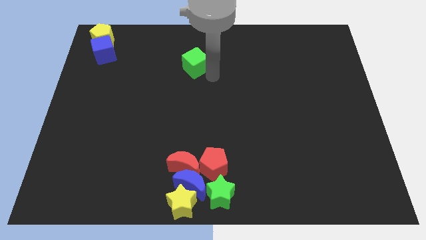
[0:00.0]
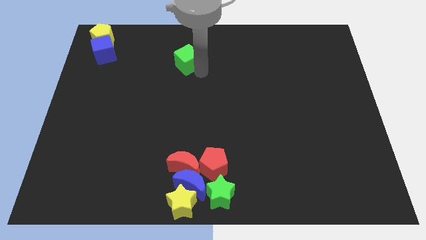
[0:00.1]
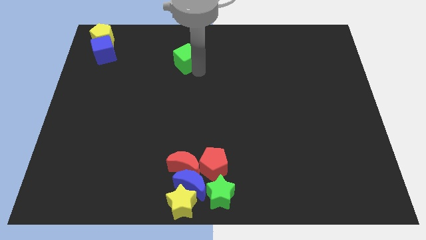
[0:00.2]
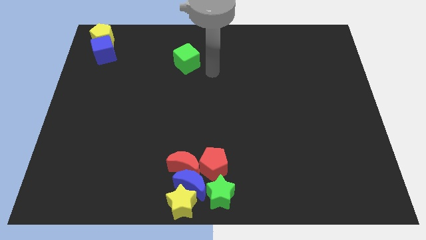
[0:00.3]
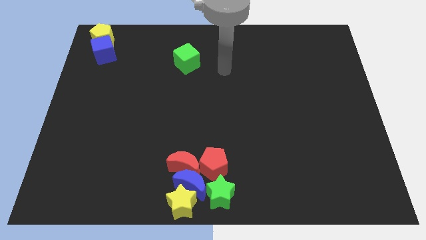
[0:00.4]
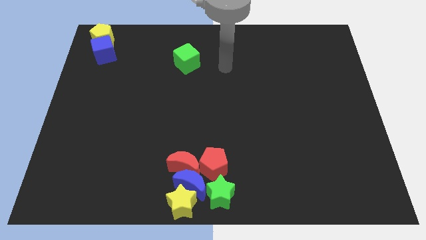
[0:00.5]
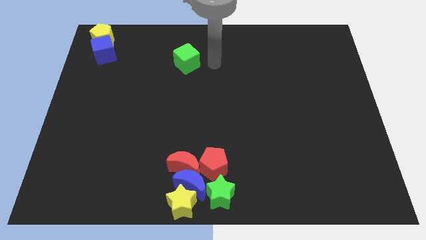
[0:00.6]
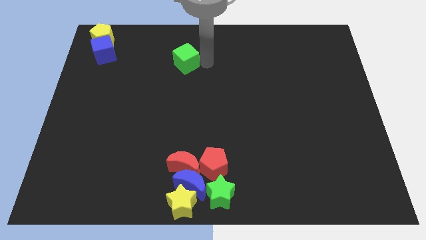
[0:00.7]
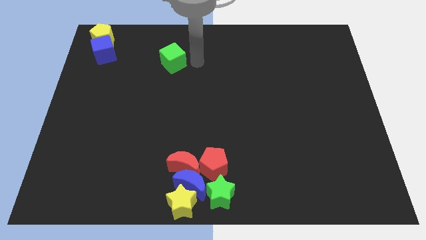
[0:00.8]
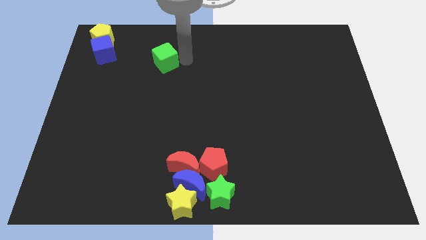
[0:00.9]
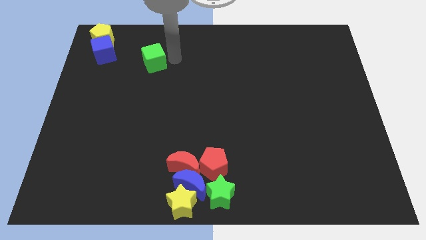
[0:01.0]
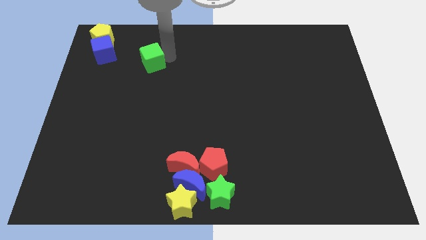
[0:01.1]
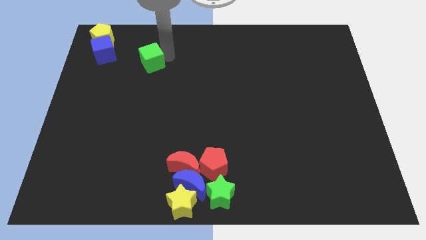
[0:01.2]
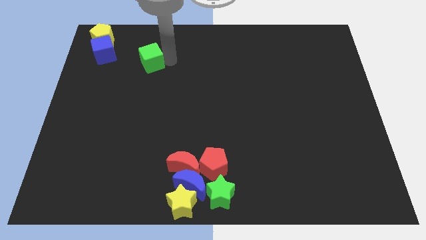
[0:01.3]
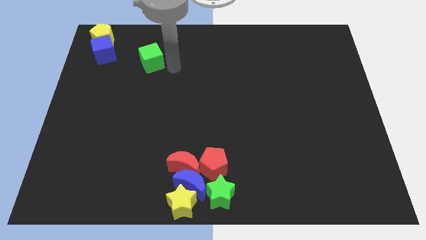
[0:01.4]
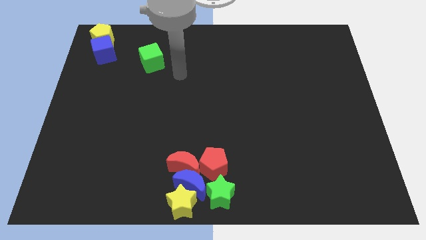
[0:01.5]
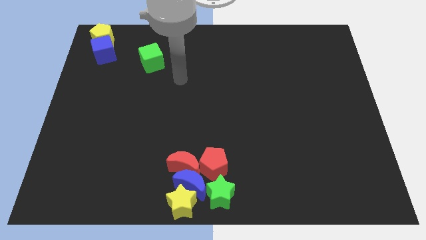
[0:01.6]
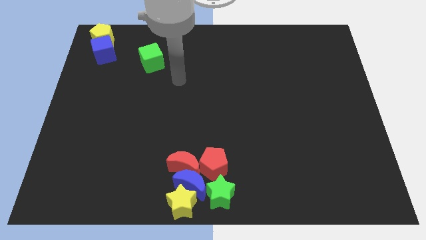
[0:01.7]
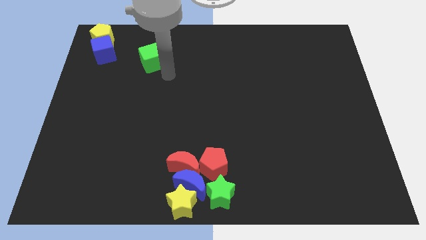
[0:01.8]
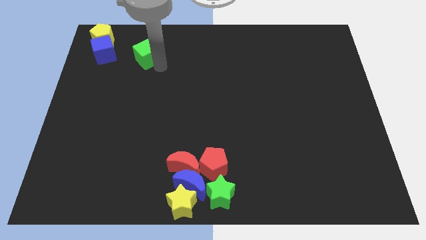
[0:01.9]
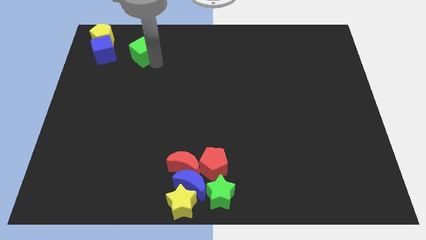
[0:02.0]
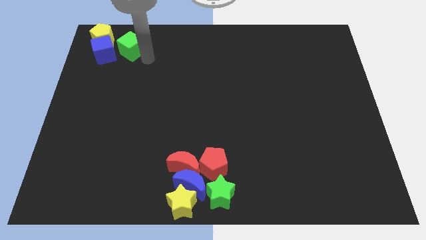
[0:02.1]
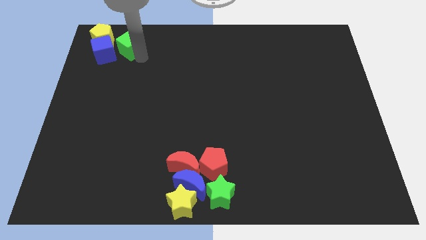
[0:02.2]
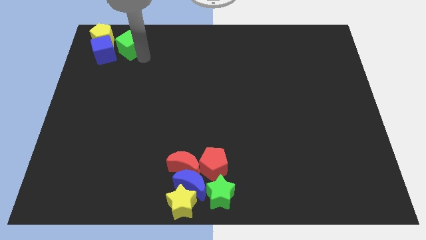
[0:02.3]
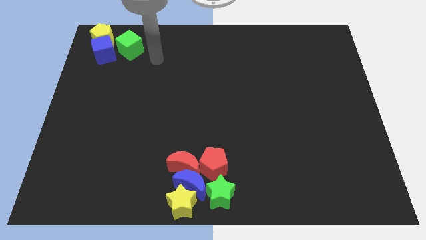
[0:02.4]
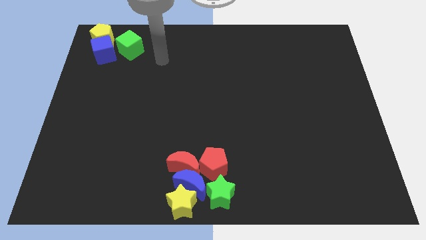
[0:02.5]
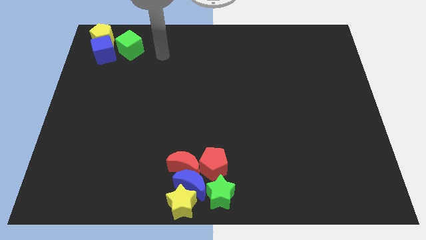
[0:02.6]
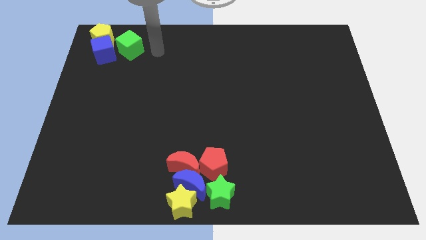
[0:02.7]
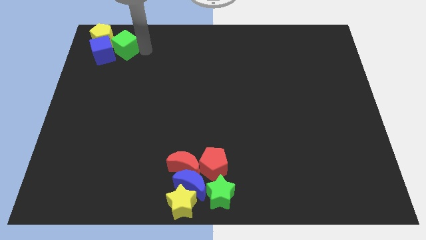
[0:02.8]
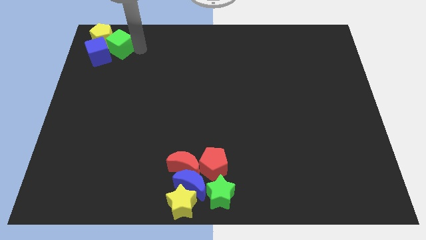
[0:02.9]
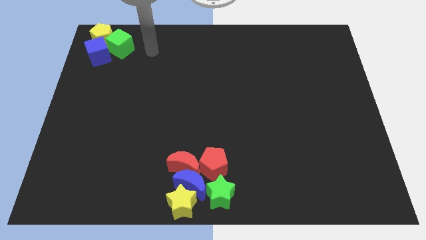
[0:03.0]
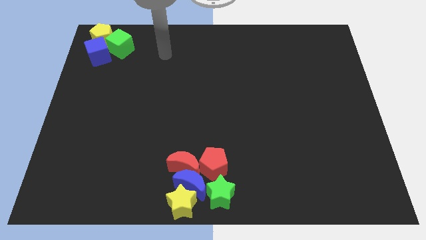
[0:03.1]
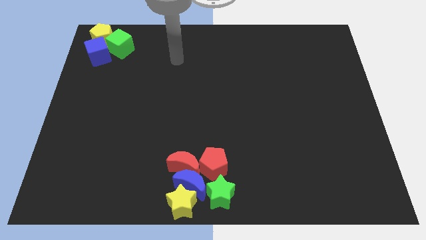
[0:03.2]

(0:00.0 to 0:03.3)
push the green cube into the blue cube

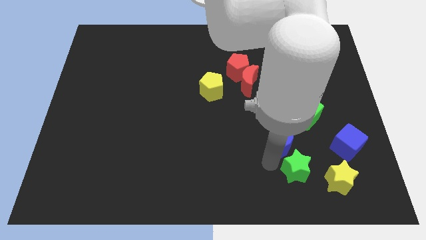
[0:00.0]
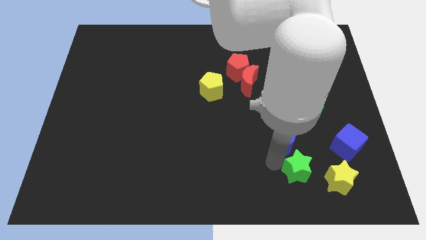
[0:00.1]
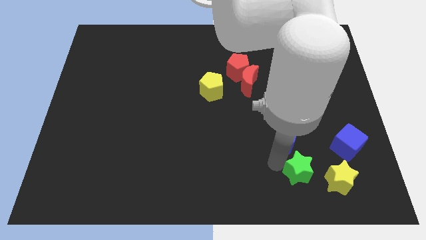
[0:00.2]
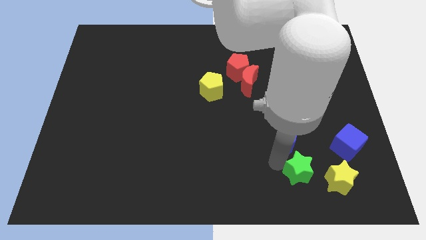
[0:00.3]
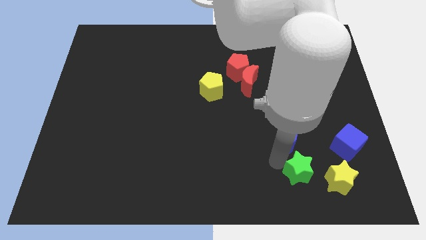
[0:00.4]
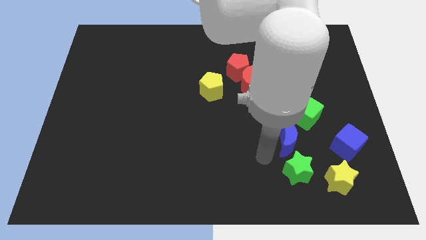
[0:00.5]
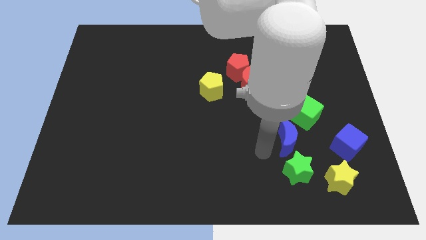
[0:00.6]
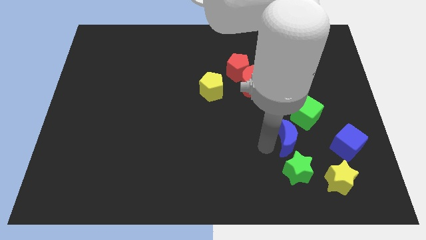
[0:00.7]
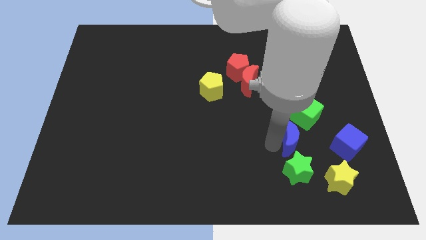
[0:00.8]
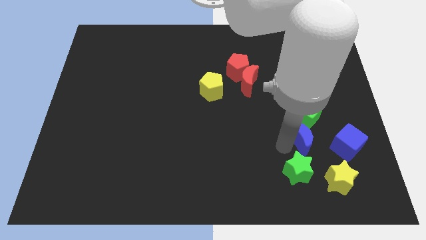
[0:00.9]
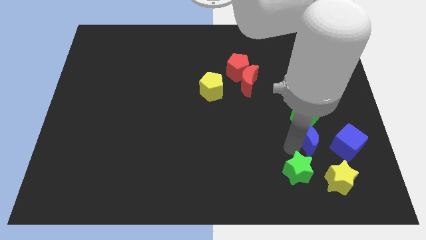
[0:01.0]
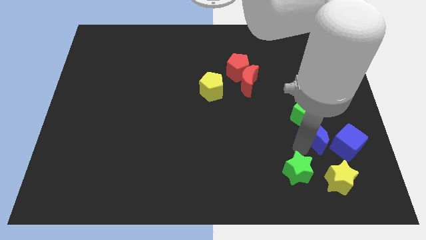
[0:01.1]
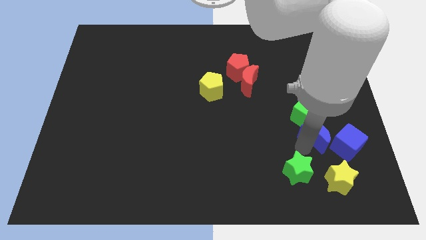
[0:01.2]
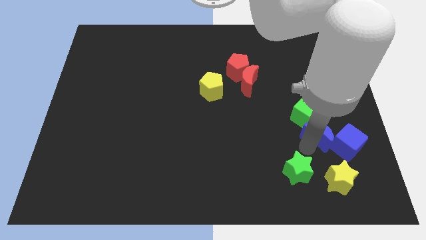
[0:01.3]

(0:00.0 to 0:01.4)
push the blue crescent to the left of blue cube

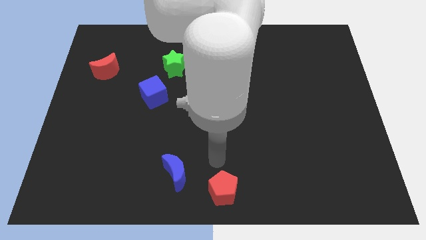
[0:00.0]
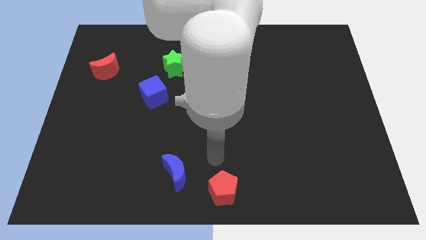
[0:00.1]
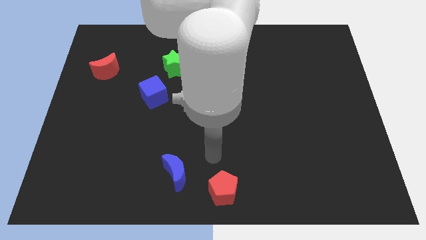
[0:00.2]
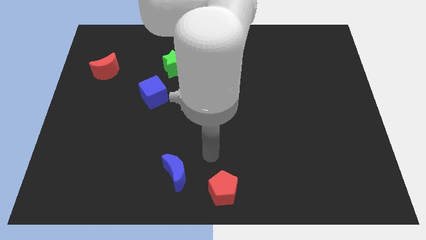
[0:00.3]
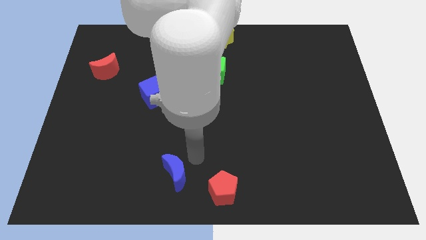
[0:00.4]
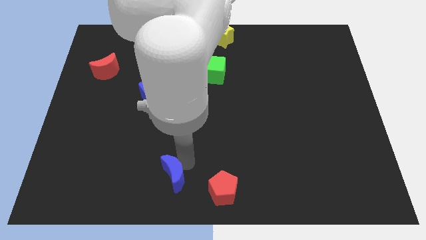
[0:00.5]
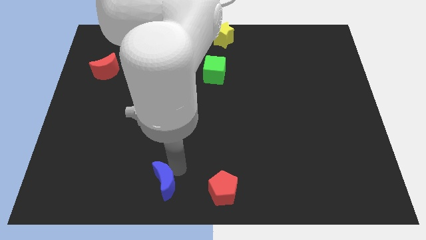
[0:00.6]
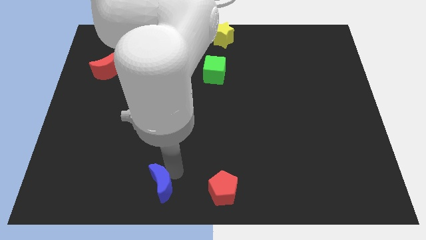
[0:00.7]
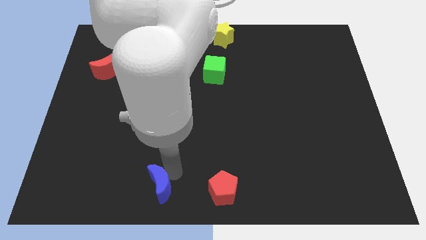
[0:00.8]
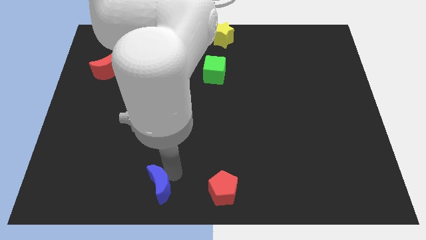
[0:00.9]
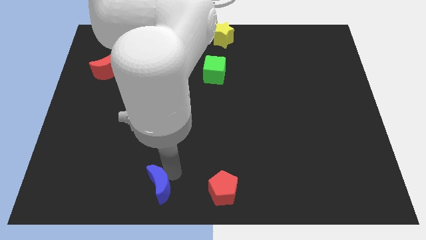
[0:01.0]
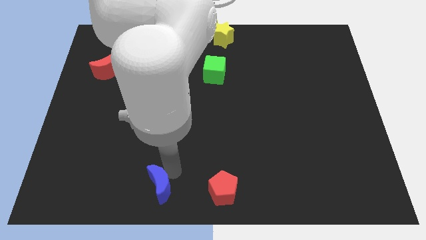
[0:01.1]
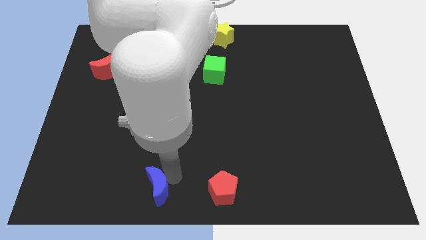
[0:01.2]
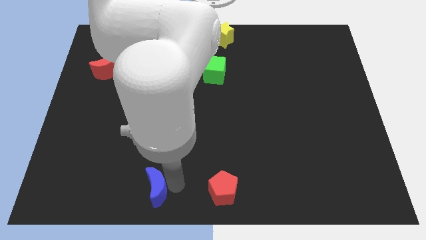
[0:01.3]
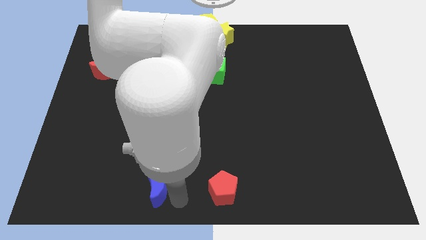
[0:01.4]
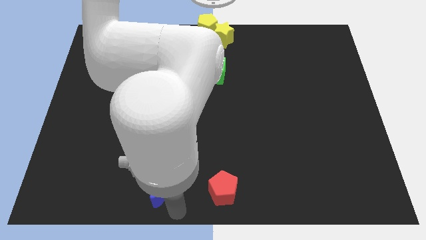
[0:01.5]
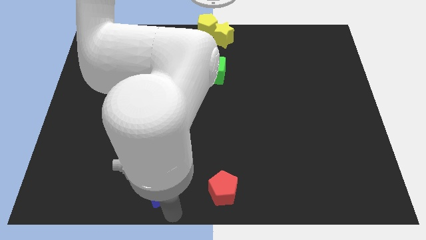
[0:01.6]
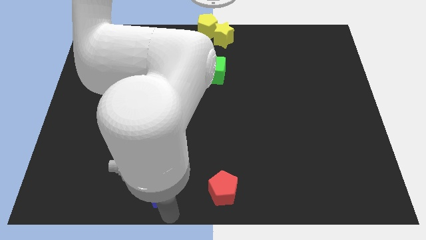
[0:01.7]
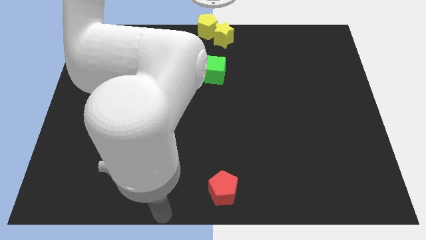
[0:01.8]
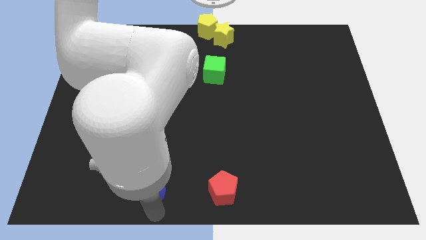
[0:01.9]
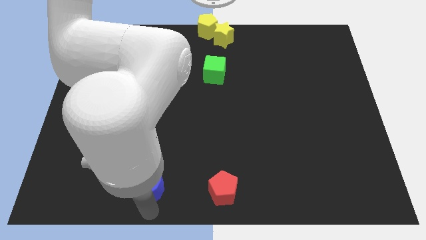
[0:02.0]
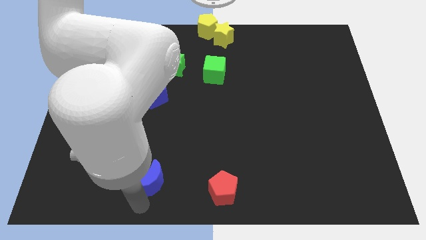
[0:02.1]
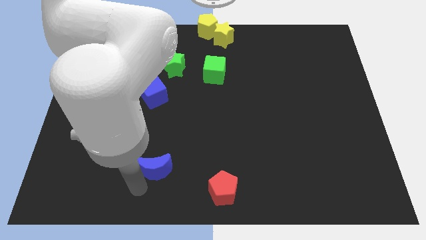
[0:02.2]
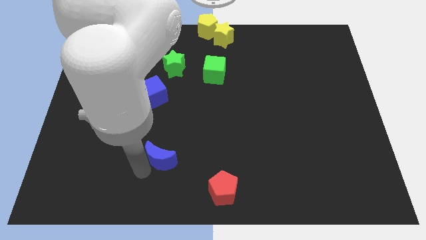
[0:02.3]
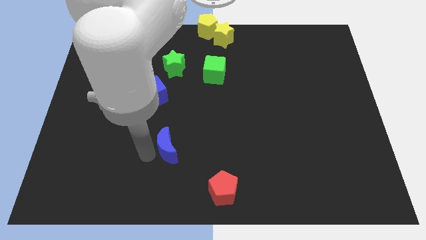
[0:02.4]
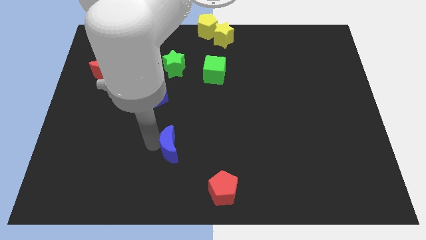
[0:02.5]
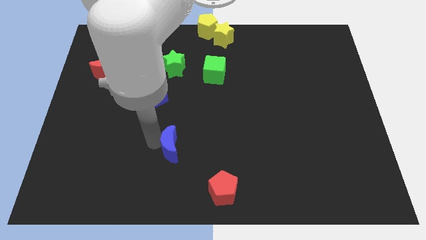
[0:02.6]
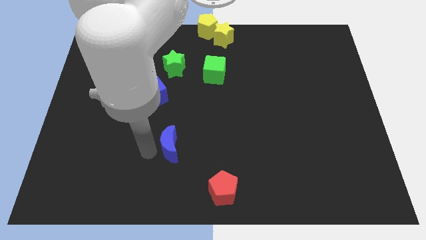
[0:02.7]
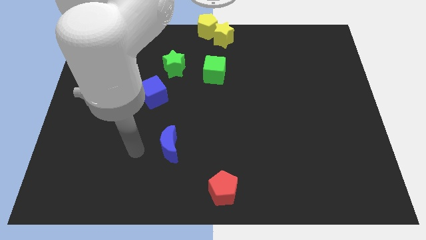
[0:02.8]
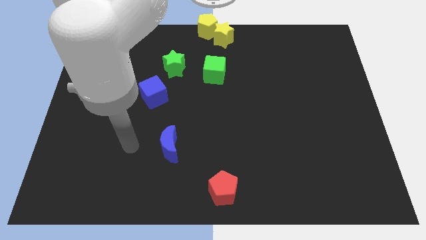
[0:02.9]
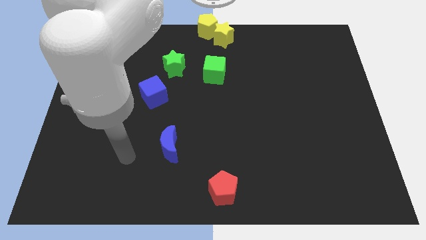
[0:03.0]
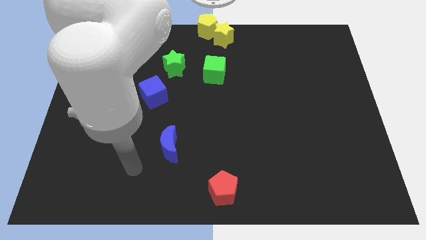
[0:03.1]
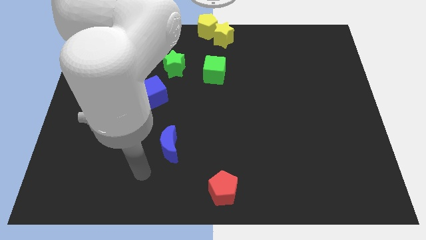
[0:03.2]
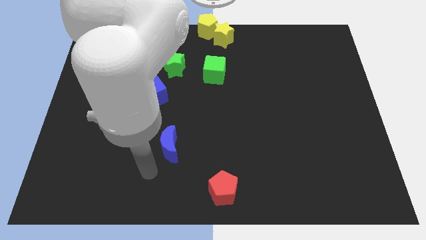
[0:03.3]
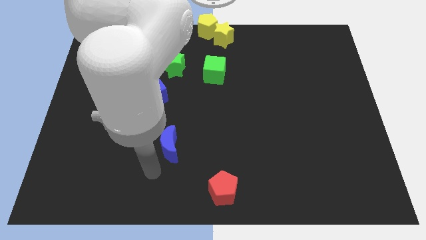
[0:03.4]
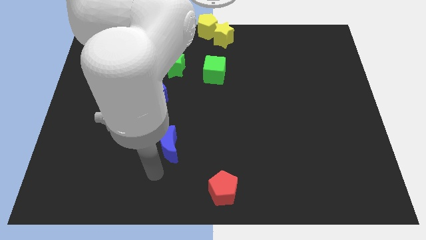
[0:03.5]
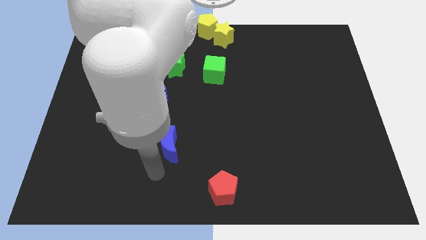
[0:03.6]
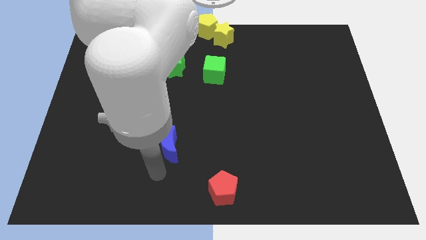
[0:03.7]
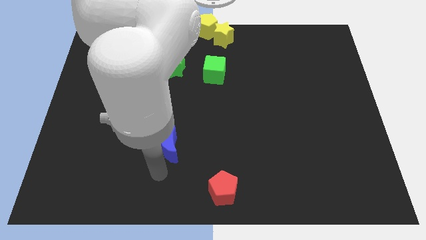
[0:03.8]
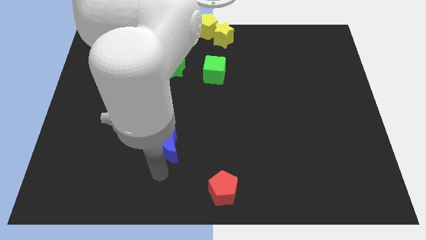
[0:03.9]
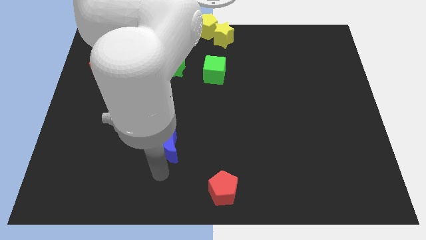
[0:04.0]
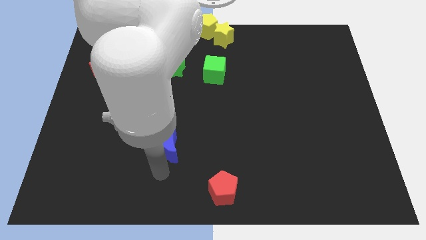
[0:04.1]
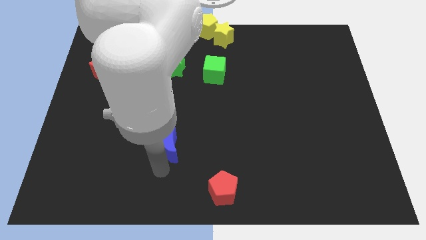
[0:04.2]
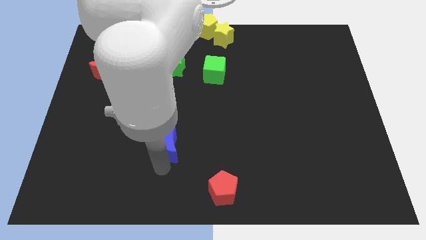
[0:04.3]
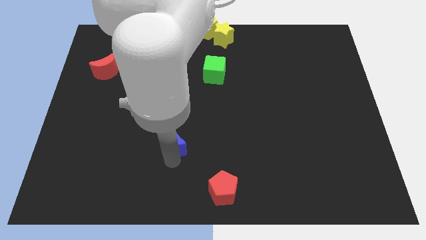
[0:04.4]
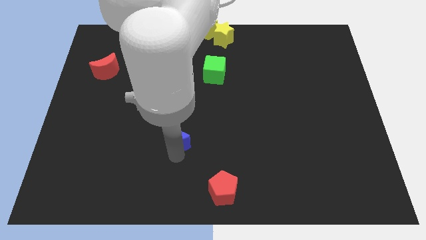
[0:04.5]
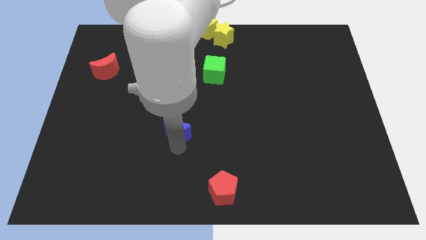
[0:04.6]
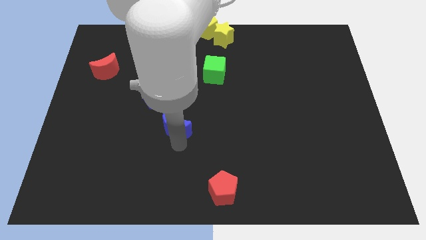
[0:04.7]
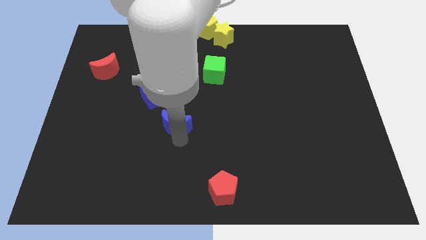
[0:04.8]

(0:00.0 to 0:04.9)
move the blue crescent to the right bottom of the blue cube
